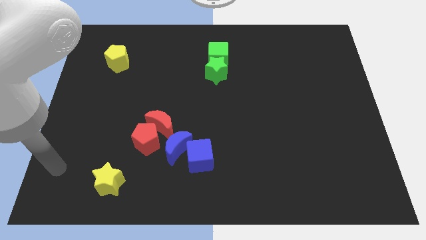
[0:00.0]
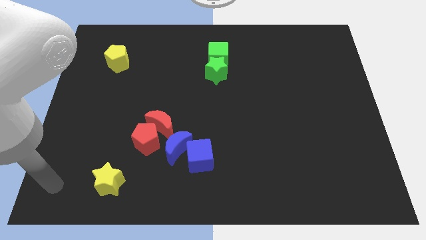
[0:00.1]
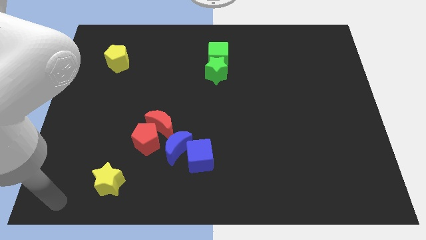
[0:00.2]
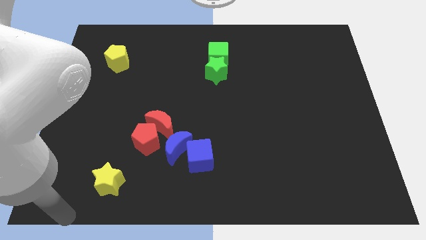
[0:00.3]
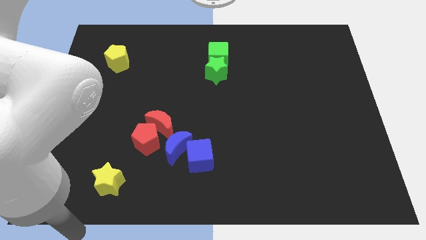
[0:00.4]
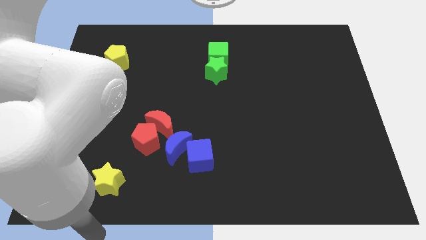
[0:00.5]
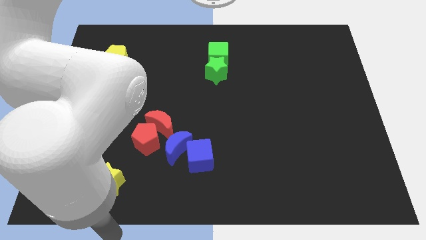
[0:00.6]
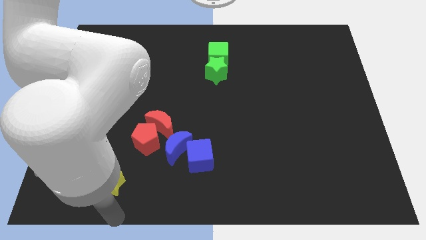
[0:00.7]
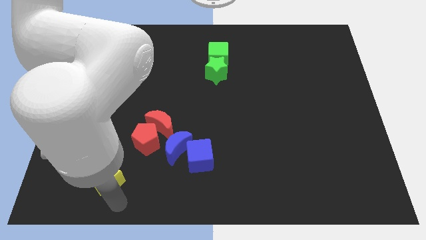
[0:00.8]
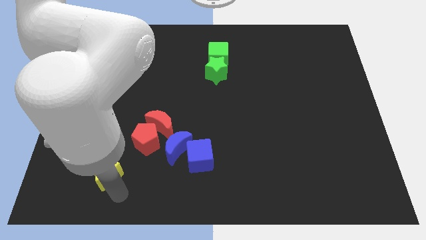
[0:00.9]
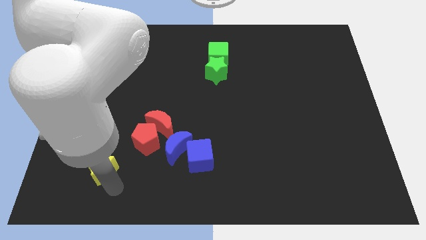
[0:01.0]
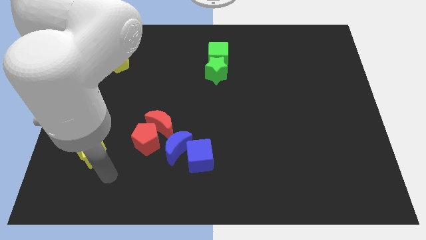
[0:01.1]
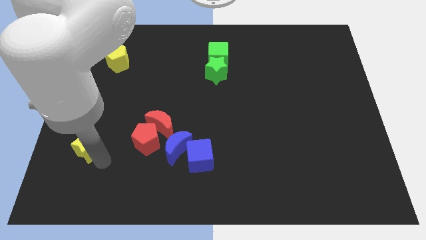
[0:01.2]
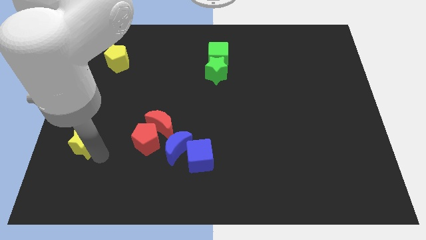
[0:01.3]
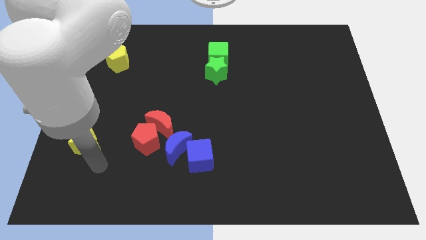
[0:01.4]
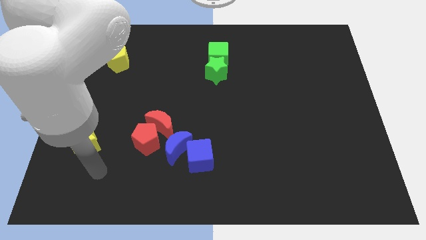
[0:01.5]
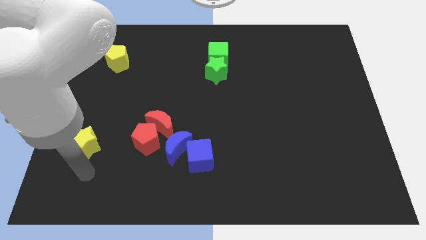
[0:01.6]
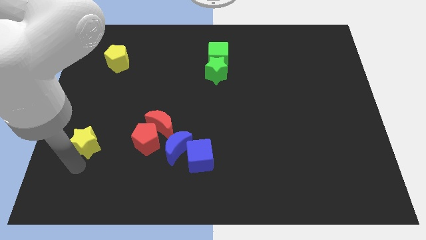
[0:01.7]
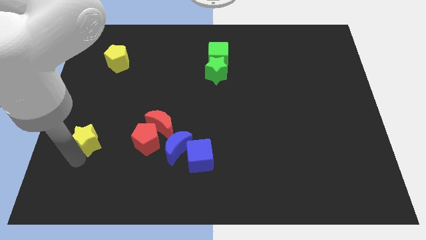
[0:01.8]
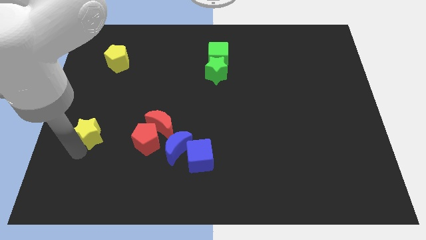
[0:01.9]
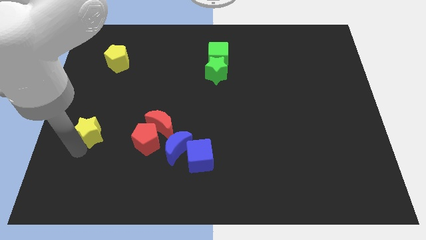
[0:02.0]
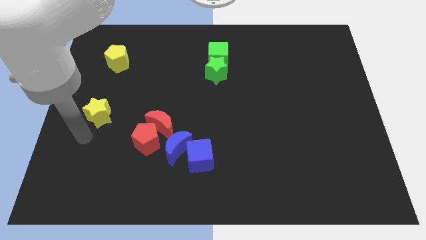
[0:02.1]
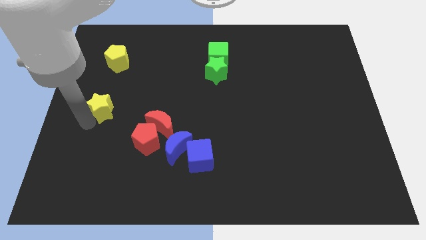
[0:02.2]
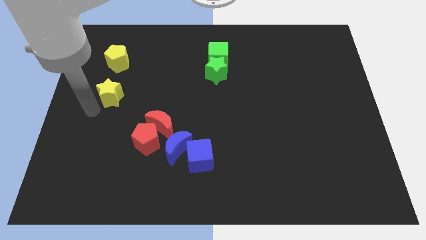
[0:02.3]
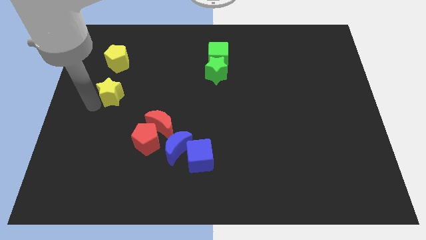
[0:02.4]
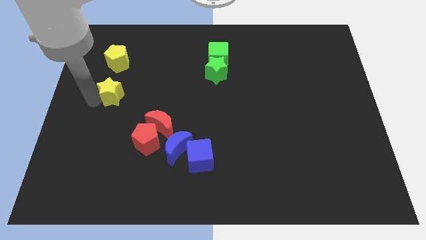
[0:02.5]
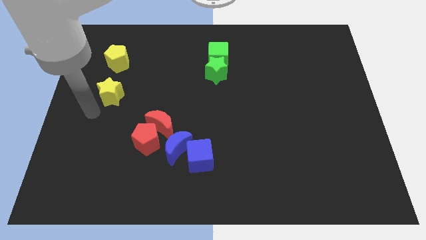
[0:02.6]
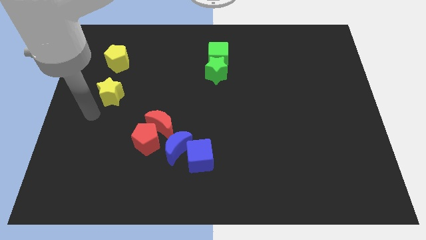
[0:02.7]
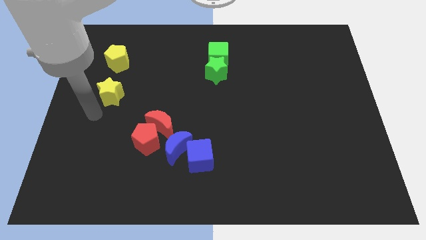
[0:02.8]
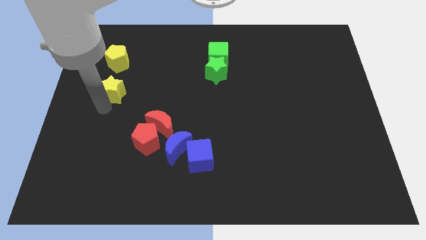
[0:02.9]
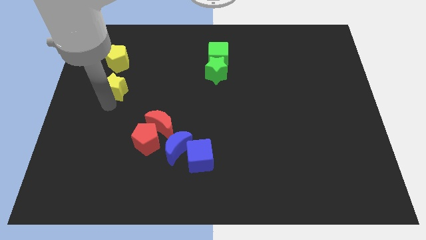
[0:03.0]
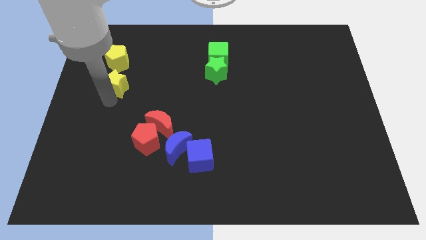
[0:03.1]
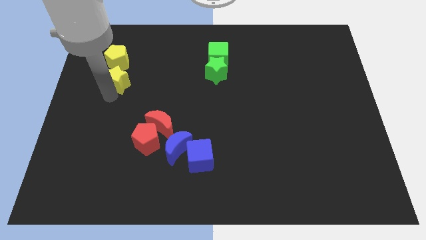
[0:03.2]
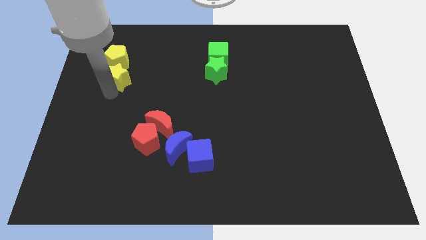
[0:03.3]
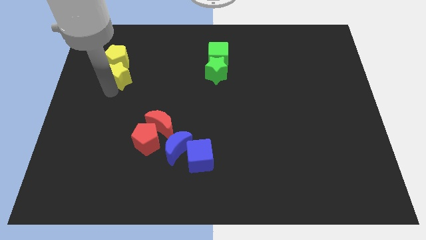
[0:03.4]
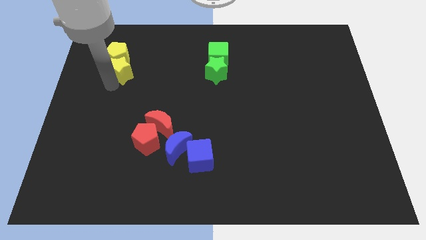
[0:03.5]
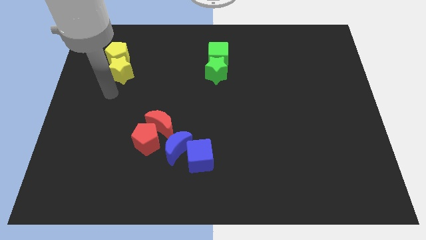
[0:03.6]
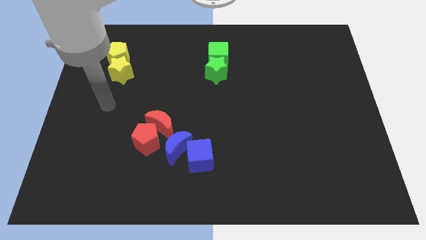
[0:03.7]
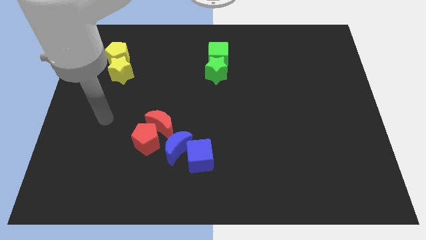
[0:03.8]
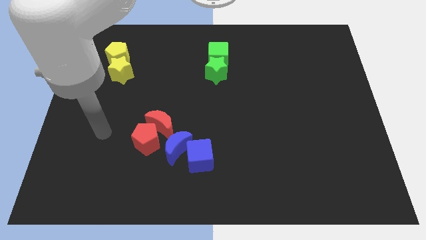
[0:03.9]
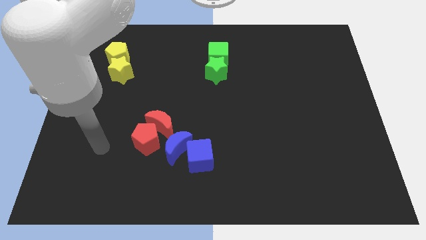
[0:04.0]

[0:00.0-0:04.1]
move the yellow star into the yellow pentagon

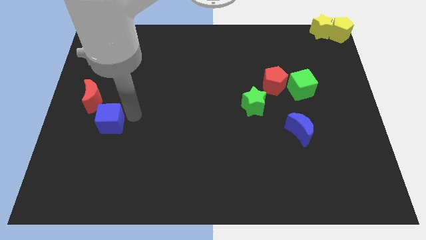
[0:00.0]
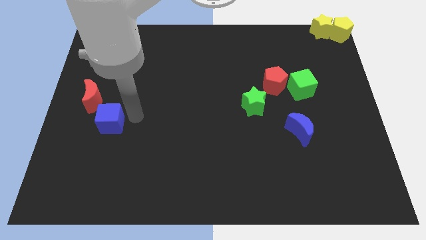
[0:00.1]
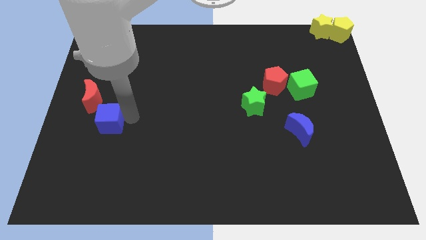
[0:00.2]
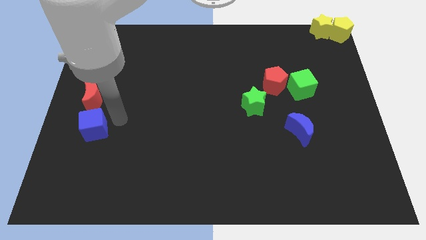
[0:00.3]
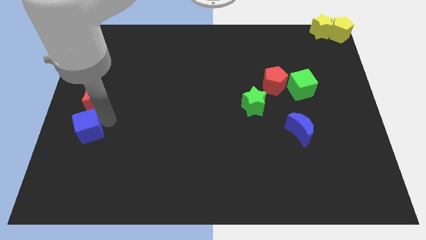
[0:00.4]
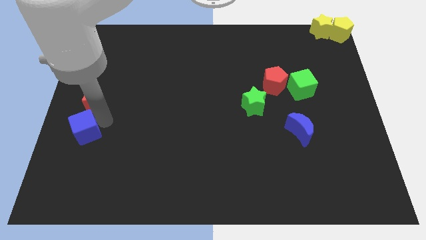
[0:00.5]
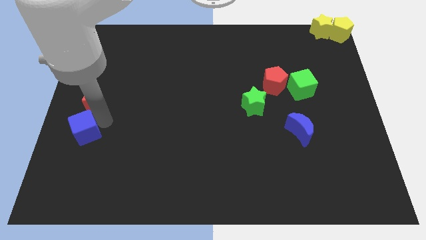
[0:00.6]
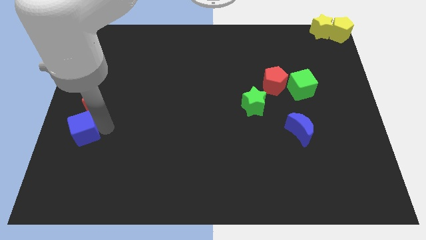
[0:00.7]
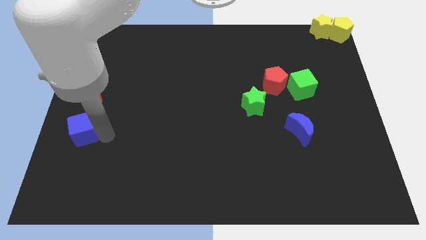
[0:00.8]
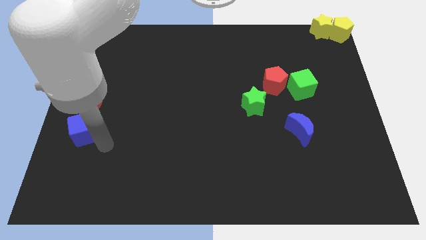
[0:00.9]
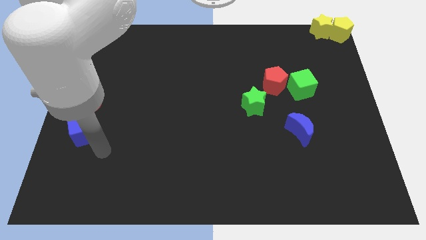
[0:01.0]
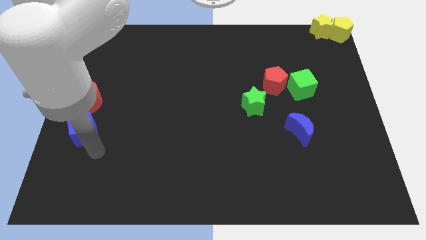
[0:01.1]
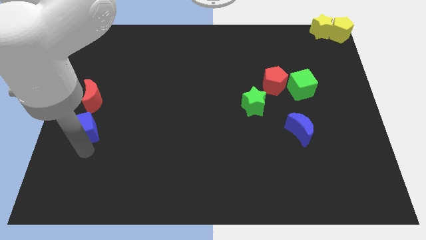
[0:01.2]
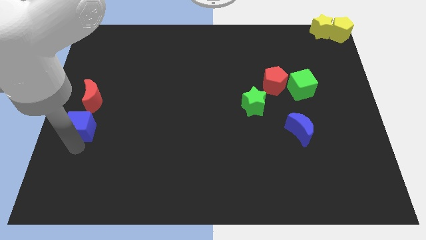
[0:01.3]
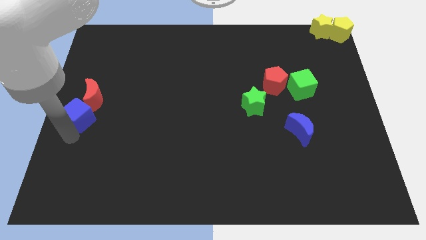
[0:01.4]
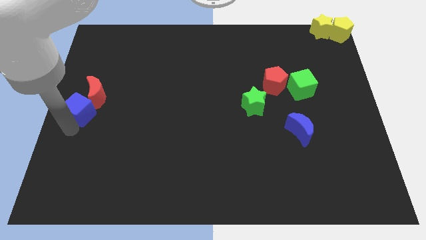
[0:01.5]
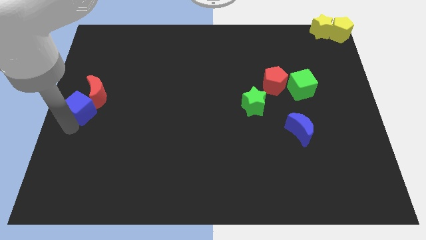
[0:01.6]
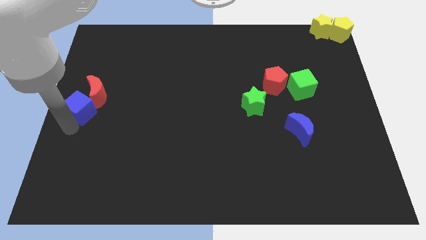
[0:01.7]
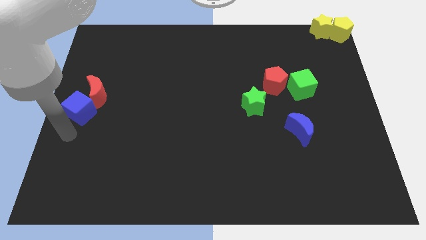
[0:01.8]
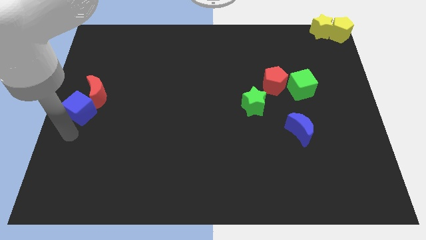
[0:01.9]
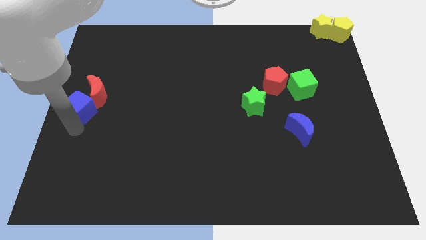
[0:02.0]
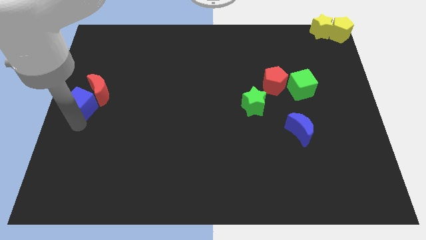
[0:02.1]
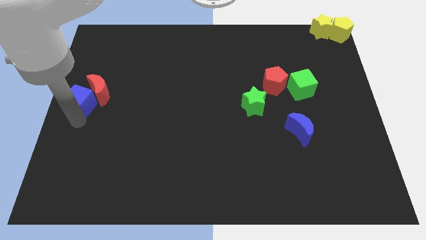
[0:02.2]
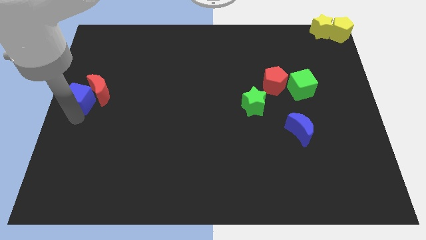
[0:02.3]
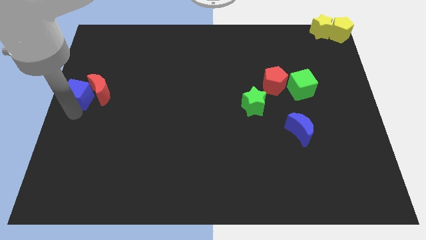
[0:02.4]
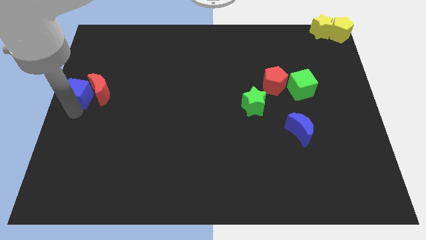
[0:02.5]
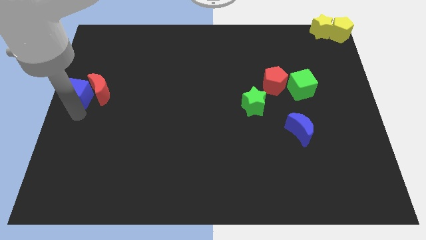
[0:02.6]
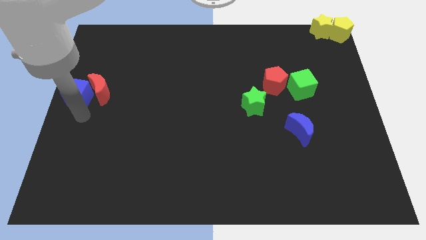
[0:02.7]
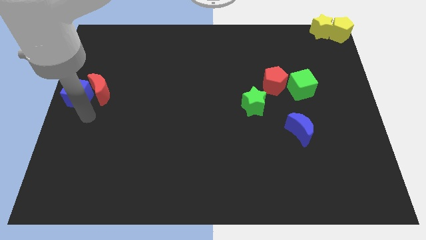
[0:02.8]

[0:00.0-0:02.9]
place the blue cube to the left of red moon

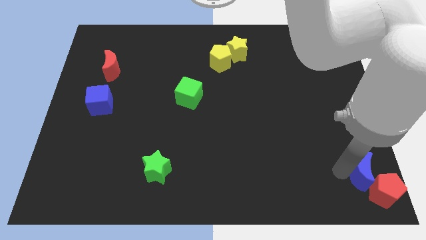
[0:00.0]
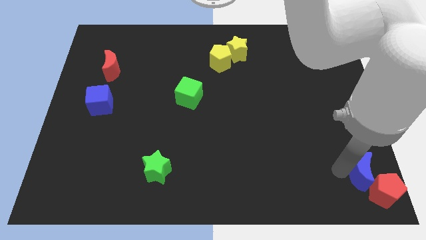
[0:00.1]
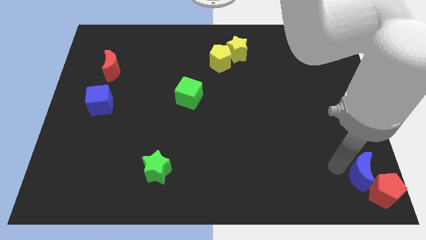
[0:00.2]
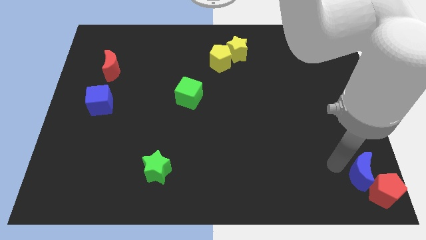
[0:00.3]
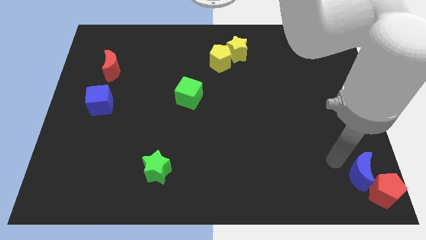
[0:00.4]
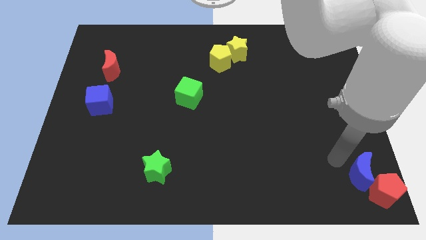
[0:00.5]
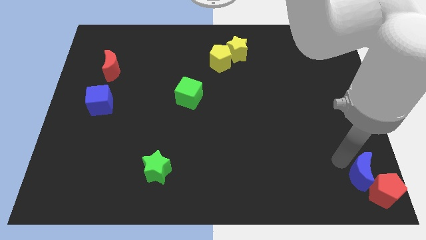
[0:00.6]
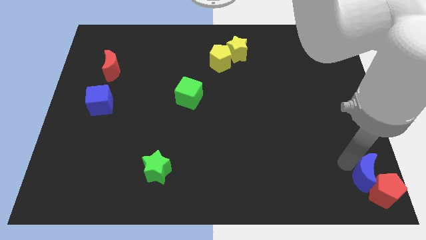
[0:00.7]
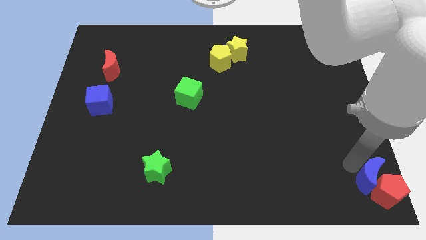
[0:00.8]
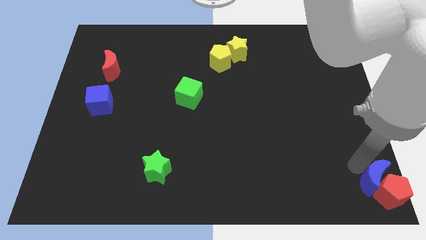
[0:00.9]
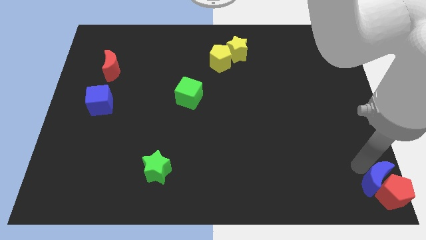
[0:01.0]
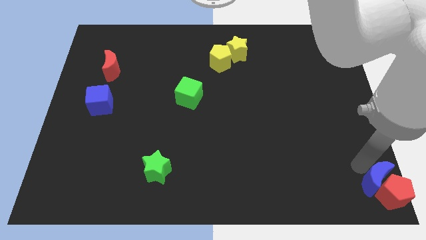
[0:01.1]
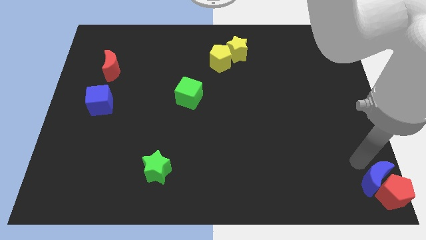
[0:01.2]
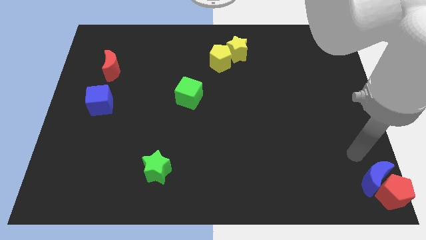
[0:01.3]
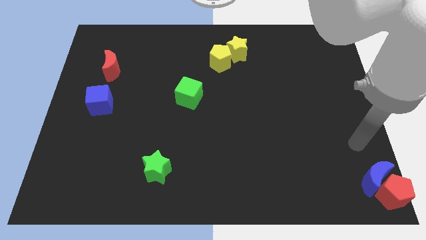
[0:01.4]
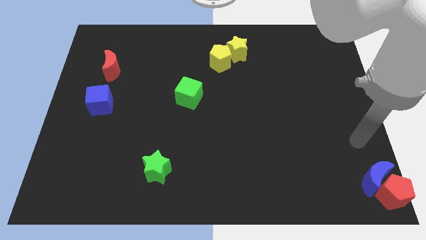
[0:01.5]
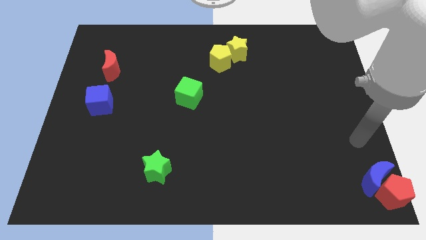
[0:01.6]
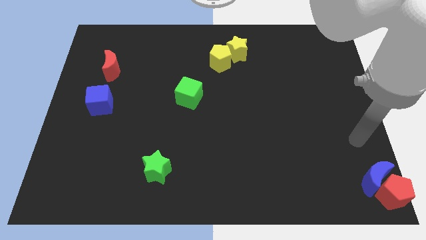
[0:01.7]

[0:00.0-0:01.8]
place the red pentagon and blue moon to the bottom right corner of the board

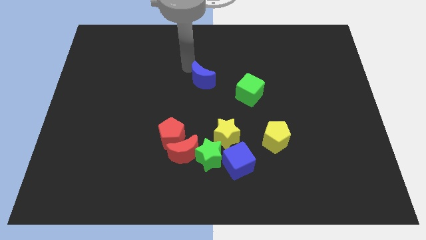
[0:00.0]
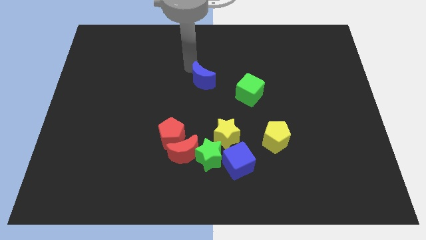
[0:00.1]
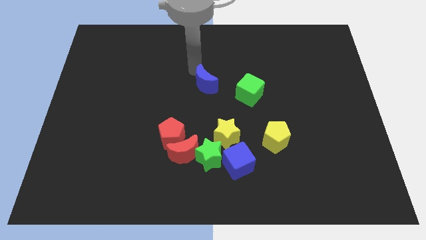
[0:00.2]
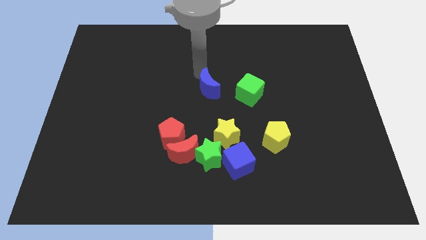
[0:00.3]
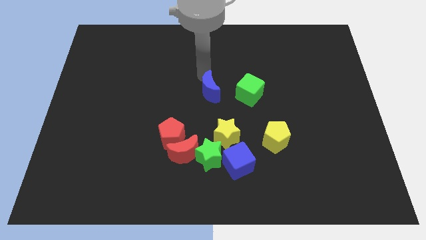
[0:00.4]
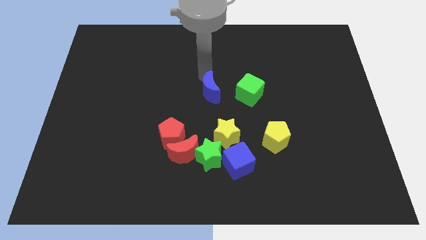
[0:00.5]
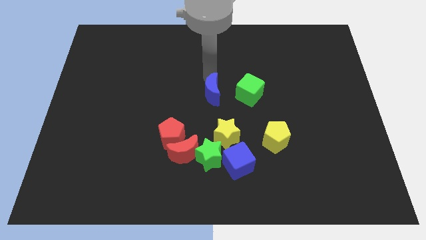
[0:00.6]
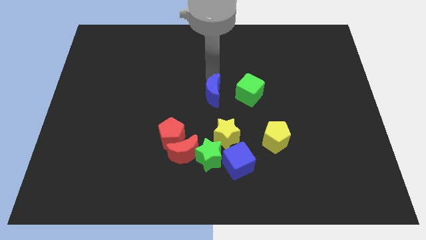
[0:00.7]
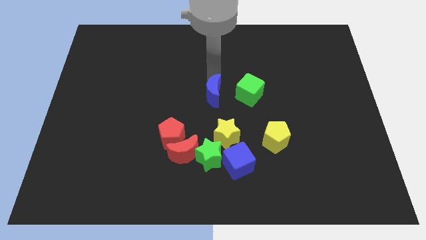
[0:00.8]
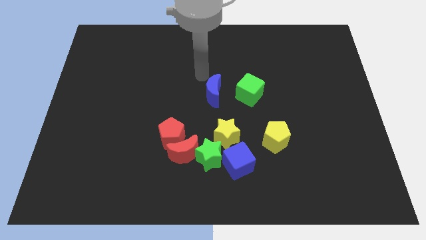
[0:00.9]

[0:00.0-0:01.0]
move the blue crescent left to the green cube
